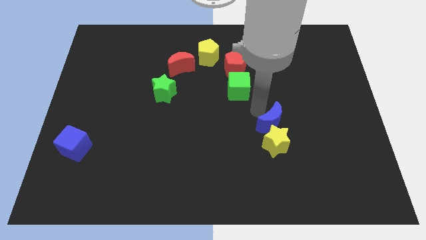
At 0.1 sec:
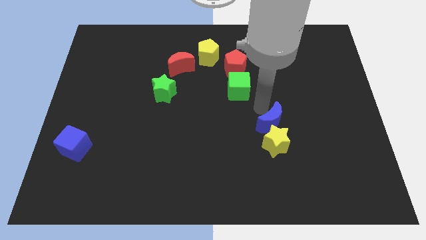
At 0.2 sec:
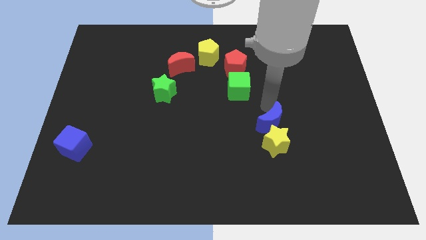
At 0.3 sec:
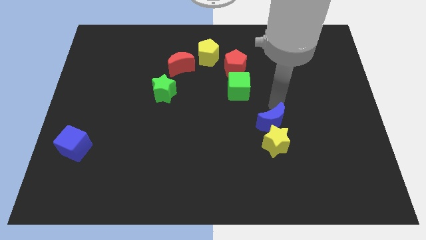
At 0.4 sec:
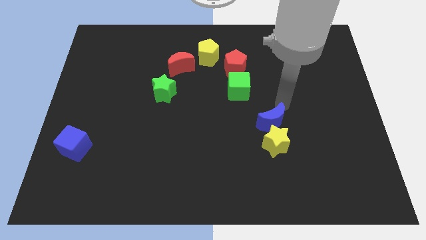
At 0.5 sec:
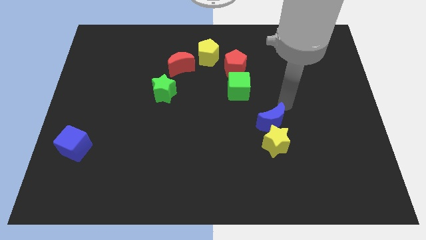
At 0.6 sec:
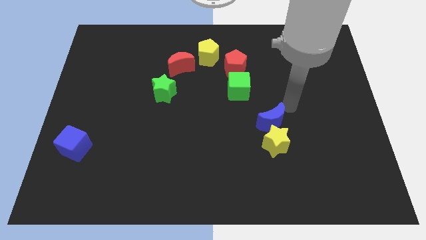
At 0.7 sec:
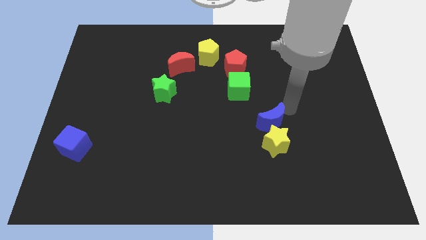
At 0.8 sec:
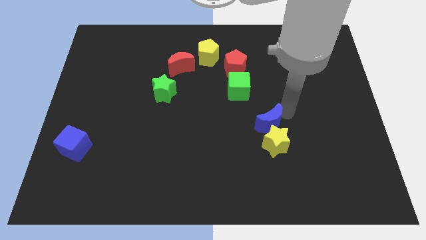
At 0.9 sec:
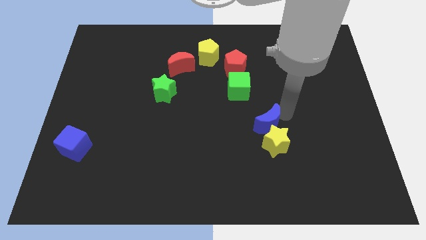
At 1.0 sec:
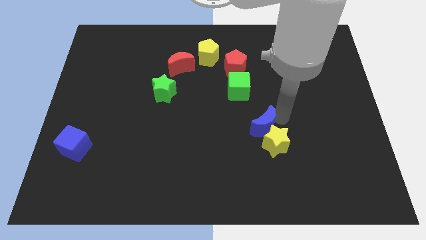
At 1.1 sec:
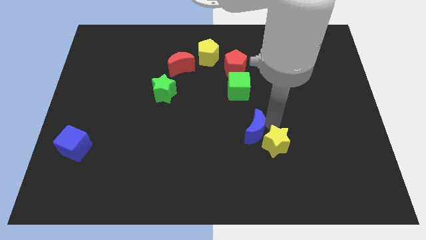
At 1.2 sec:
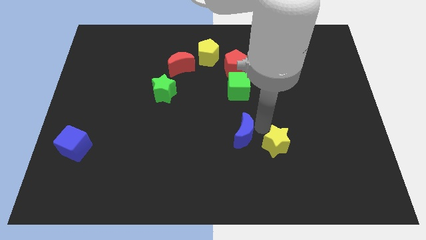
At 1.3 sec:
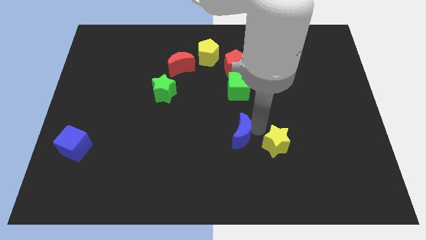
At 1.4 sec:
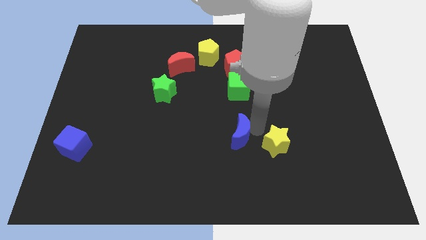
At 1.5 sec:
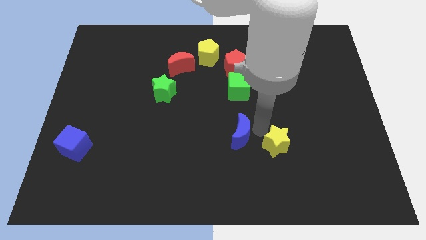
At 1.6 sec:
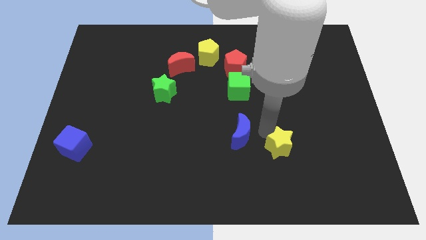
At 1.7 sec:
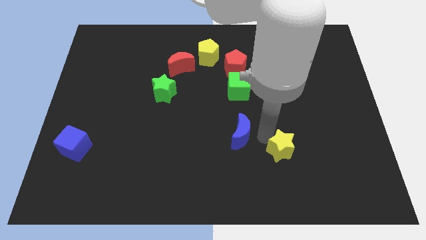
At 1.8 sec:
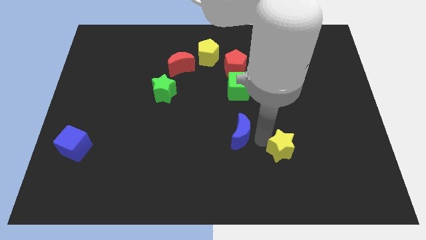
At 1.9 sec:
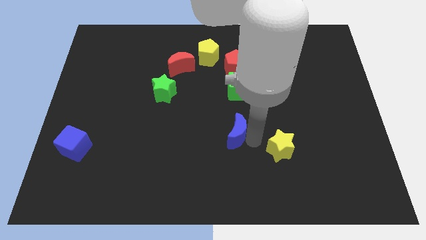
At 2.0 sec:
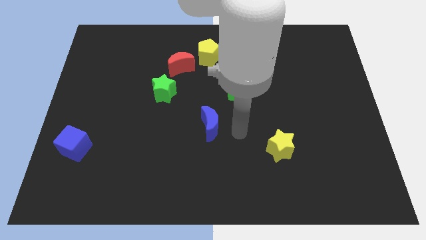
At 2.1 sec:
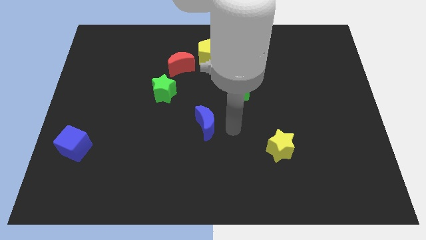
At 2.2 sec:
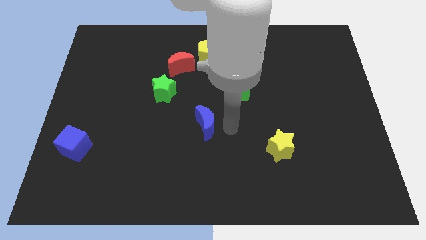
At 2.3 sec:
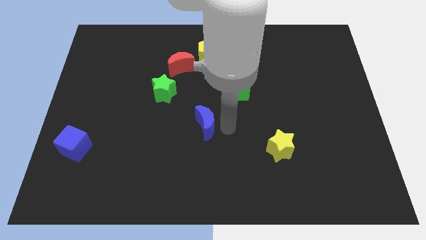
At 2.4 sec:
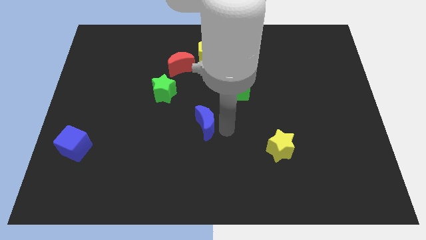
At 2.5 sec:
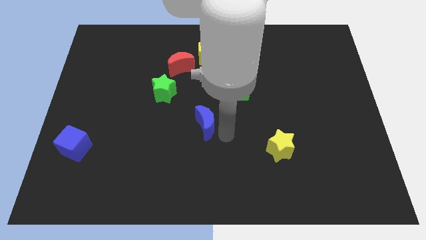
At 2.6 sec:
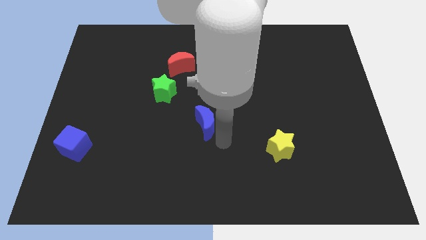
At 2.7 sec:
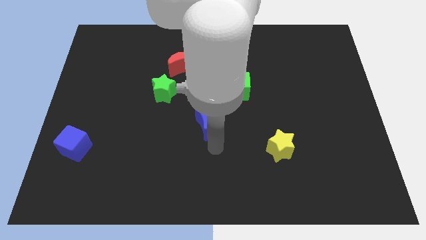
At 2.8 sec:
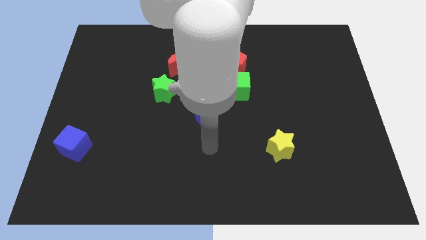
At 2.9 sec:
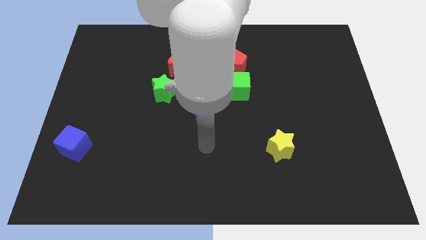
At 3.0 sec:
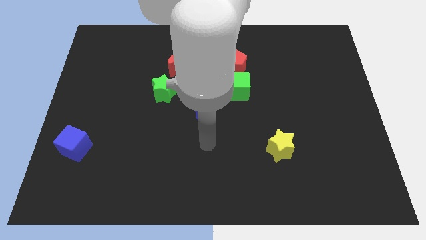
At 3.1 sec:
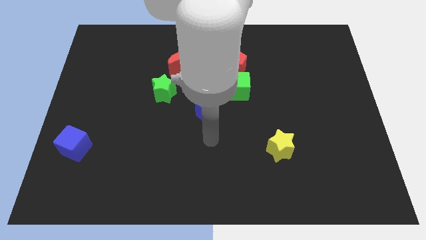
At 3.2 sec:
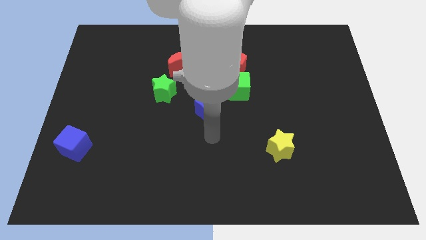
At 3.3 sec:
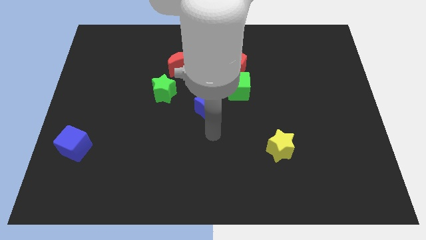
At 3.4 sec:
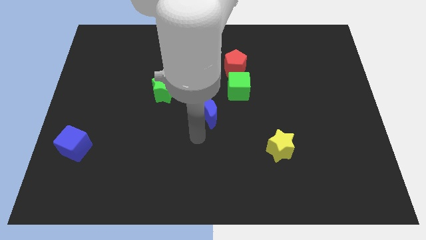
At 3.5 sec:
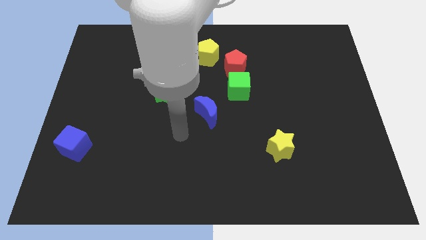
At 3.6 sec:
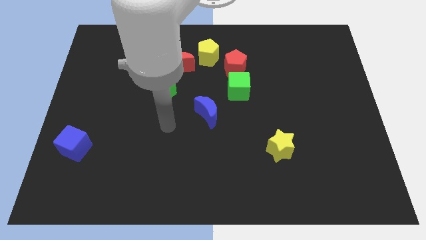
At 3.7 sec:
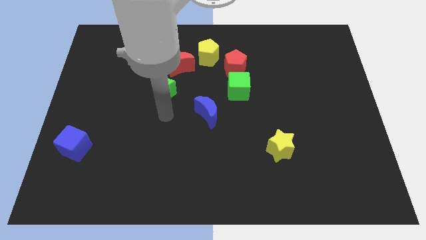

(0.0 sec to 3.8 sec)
place the blue moon vertically below the yellow pentagon

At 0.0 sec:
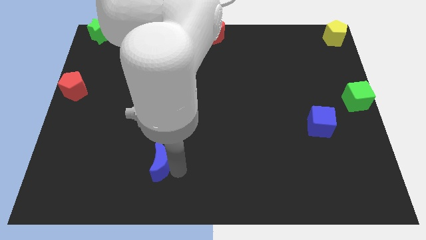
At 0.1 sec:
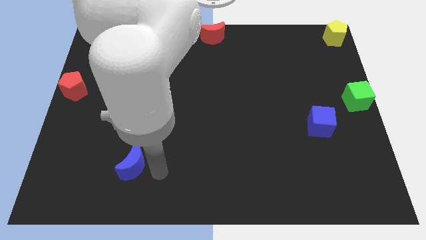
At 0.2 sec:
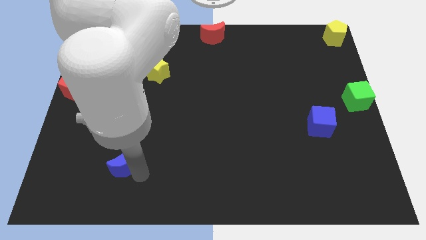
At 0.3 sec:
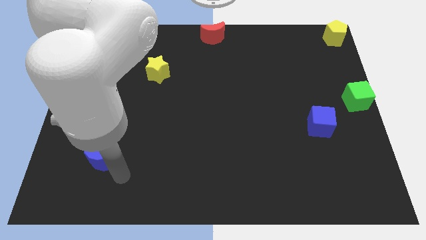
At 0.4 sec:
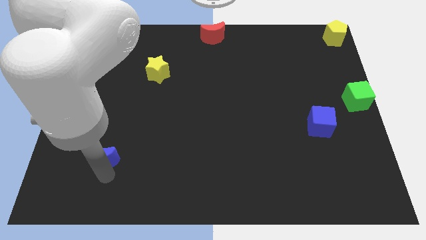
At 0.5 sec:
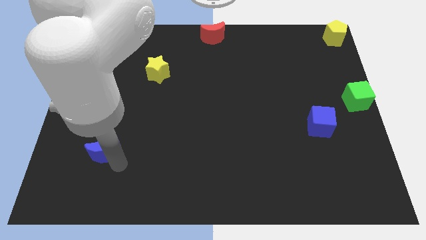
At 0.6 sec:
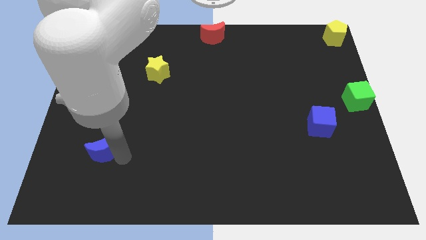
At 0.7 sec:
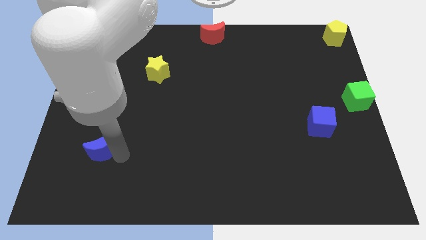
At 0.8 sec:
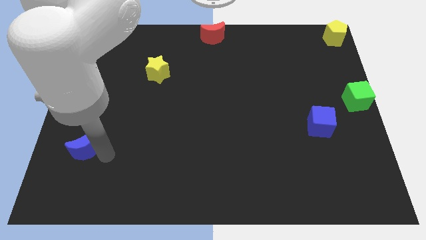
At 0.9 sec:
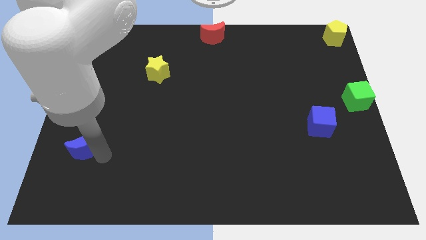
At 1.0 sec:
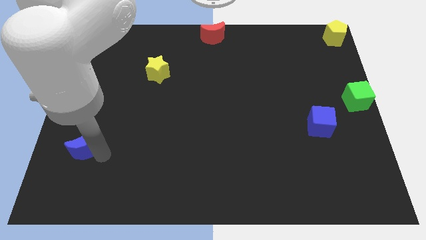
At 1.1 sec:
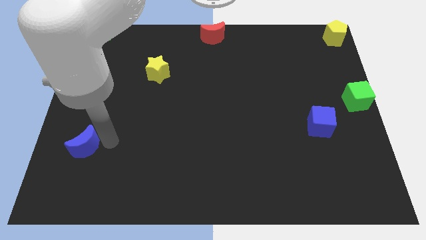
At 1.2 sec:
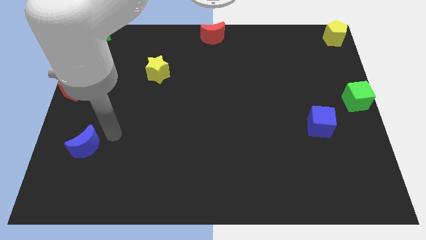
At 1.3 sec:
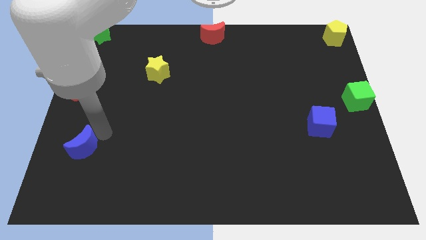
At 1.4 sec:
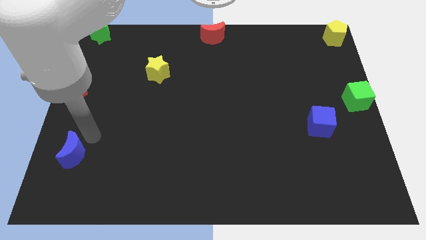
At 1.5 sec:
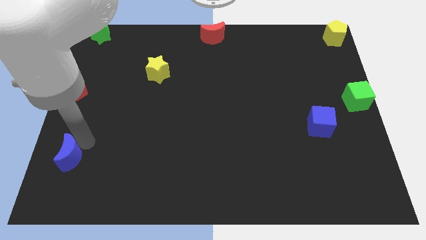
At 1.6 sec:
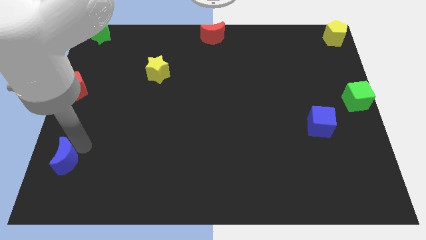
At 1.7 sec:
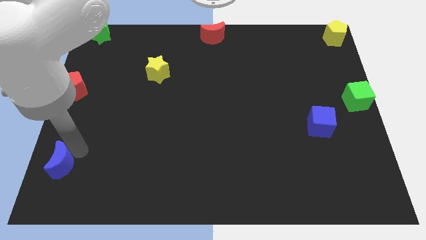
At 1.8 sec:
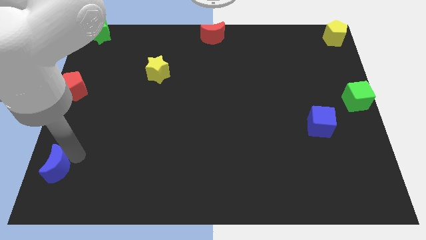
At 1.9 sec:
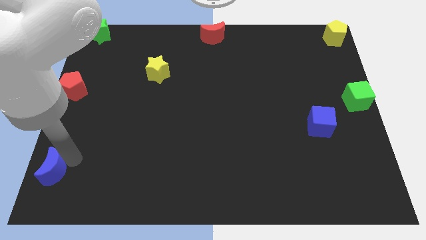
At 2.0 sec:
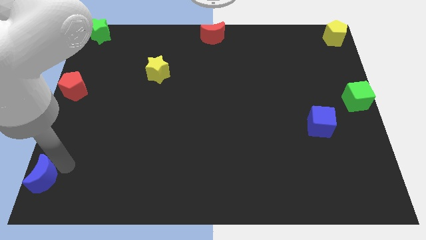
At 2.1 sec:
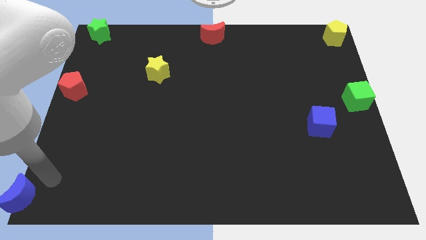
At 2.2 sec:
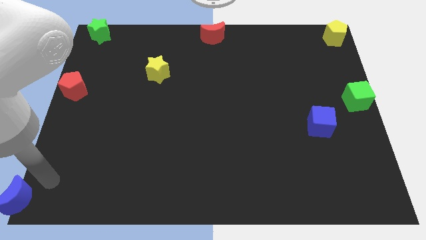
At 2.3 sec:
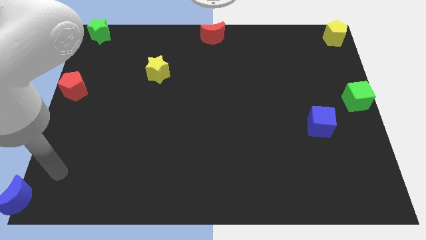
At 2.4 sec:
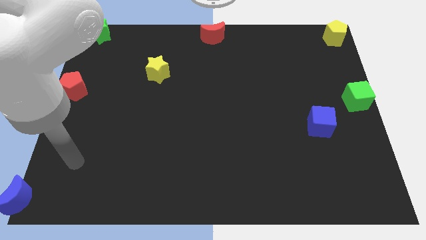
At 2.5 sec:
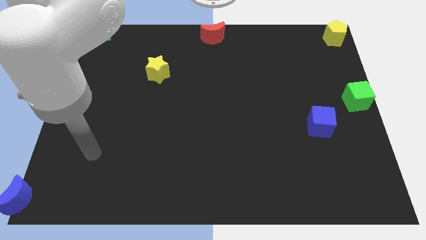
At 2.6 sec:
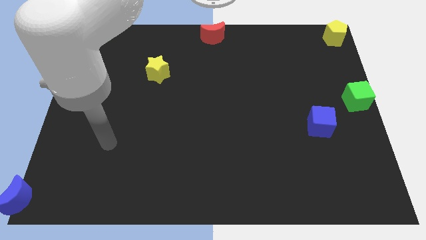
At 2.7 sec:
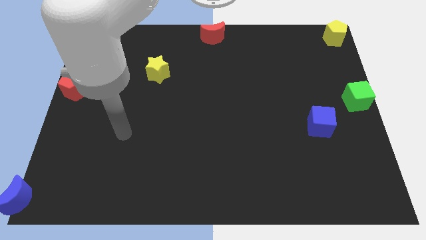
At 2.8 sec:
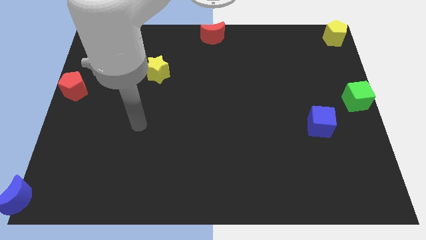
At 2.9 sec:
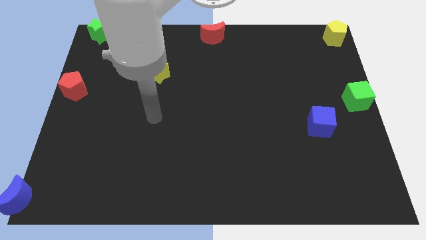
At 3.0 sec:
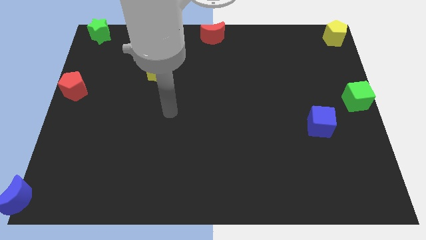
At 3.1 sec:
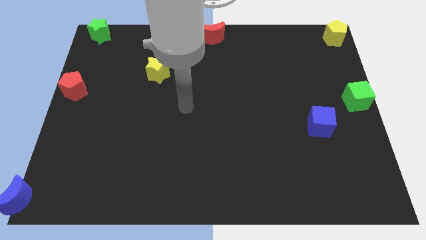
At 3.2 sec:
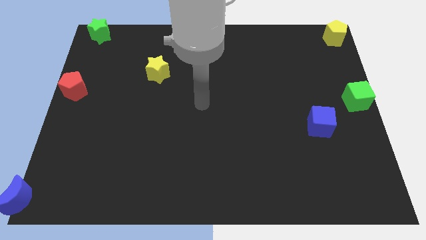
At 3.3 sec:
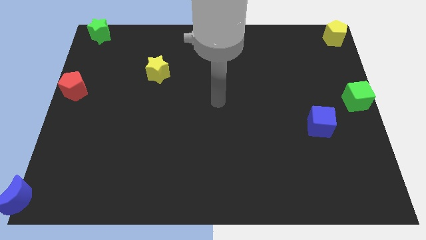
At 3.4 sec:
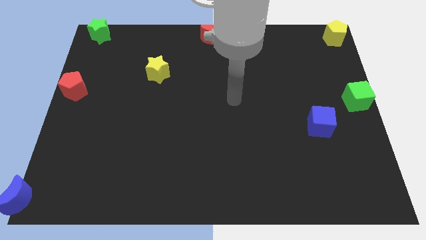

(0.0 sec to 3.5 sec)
place the blue crescent at the bottom left corner of the board

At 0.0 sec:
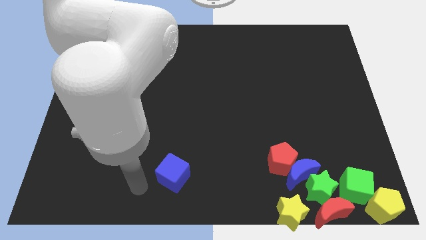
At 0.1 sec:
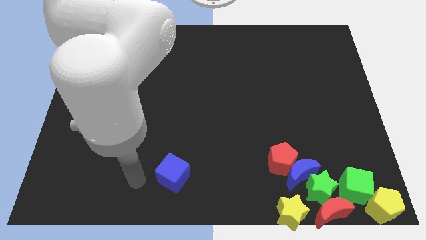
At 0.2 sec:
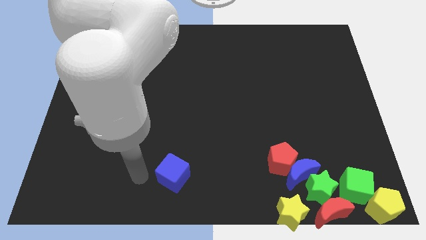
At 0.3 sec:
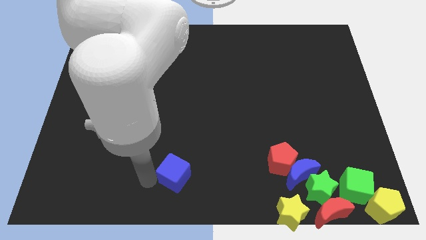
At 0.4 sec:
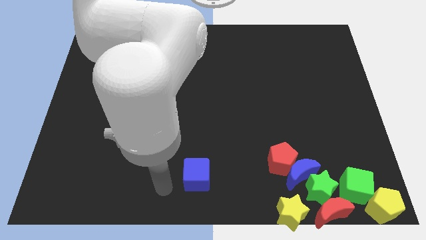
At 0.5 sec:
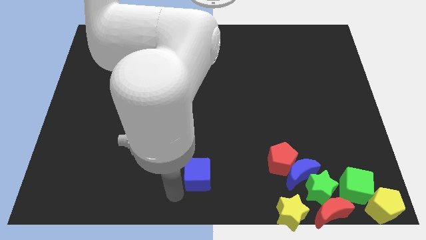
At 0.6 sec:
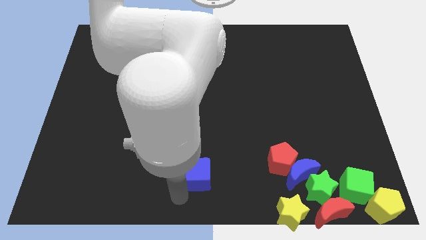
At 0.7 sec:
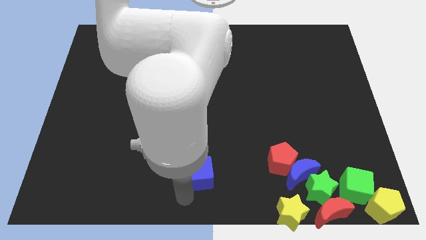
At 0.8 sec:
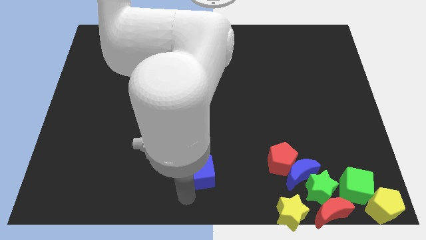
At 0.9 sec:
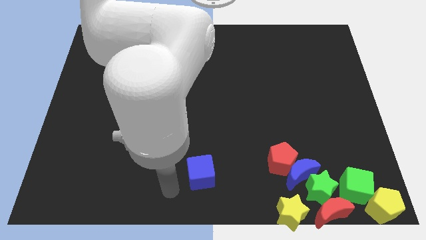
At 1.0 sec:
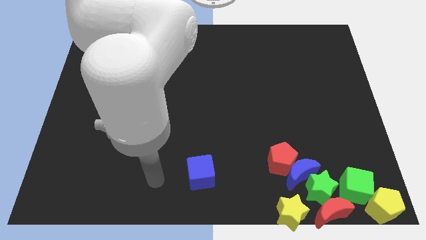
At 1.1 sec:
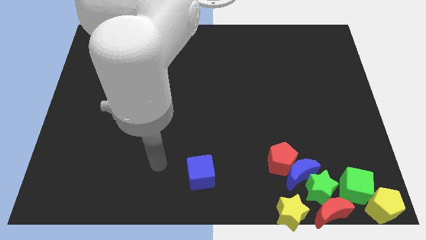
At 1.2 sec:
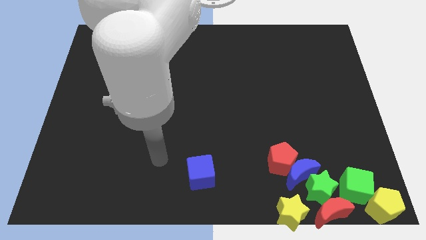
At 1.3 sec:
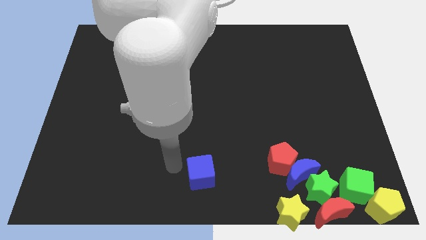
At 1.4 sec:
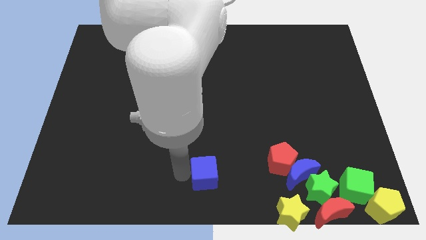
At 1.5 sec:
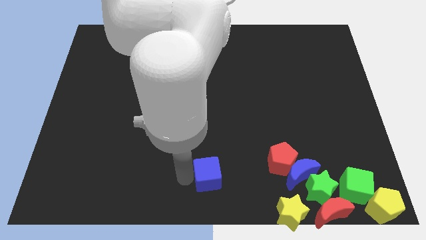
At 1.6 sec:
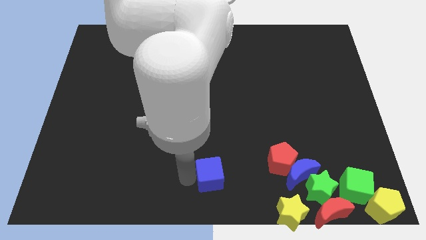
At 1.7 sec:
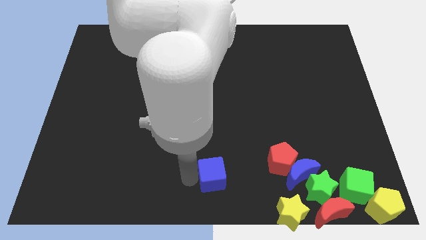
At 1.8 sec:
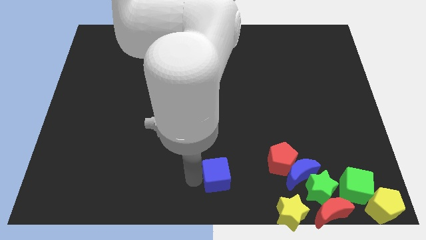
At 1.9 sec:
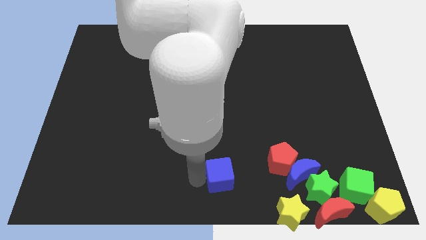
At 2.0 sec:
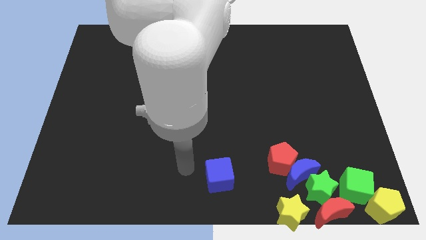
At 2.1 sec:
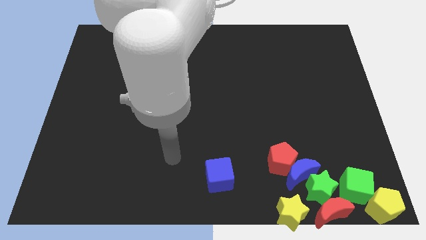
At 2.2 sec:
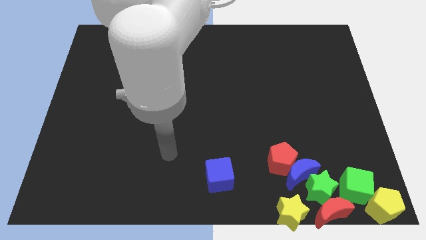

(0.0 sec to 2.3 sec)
move the blue cube to the right side
